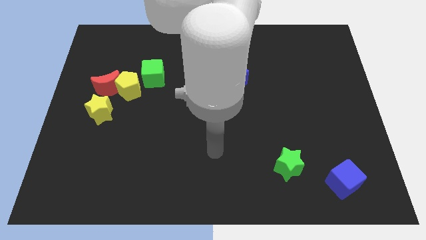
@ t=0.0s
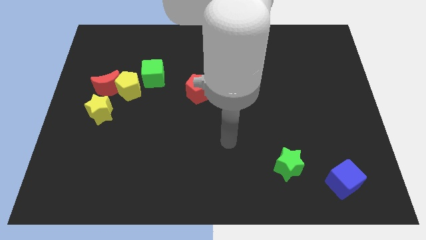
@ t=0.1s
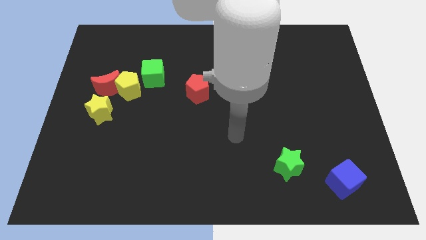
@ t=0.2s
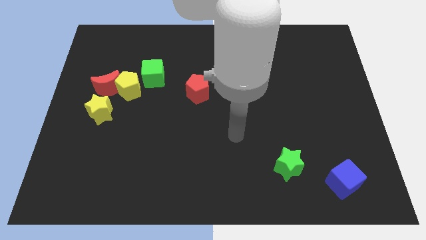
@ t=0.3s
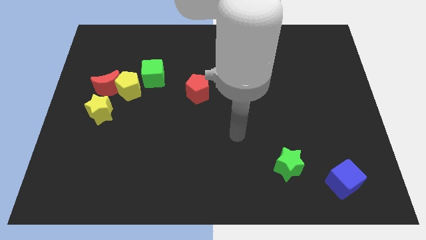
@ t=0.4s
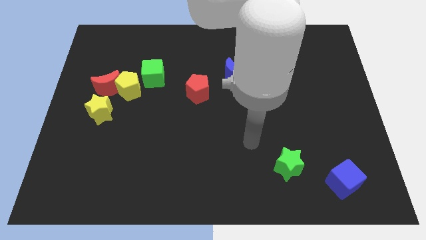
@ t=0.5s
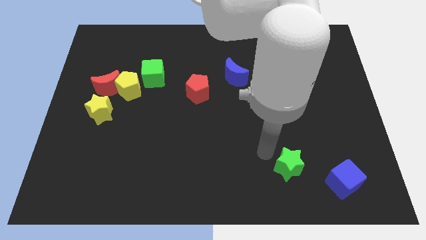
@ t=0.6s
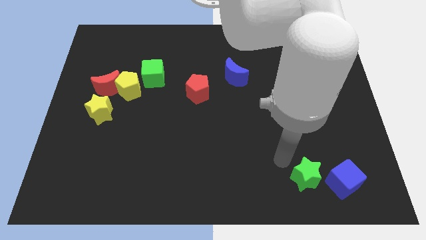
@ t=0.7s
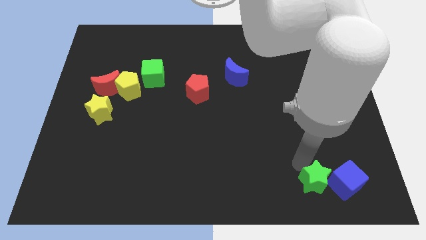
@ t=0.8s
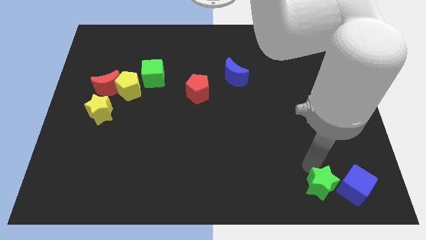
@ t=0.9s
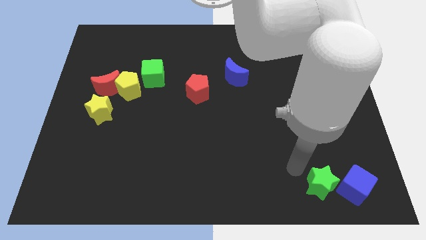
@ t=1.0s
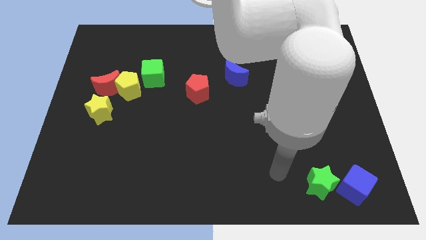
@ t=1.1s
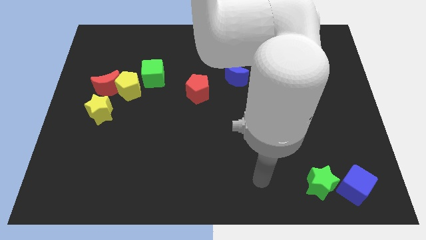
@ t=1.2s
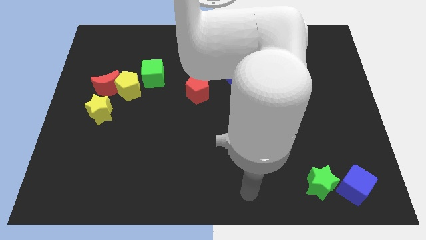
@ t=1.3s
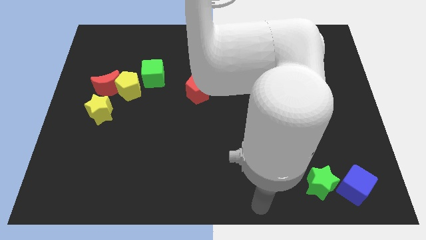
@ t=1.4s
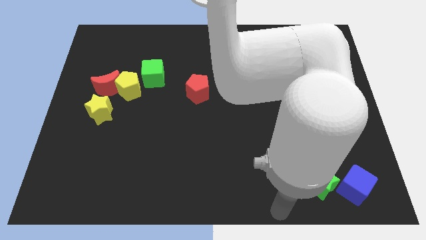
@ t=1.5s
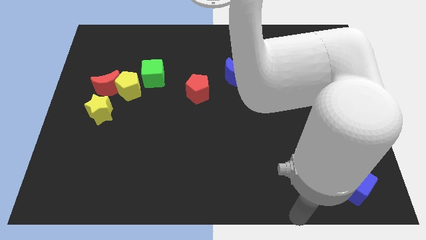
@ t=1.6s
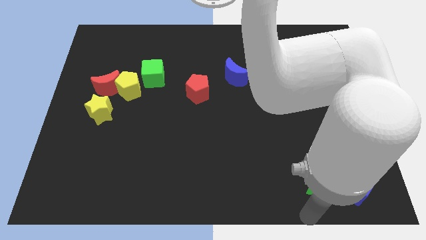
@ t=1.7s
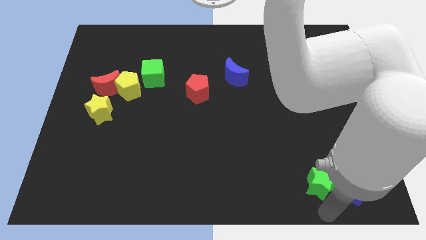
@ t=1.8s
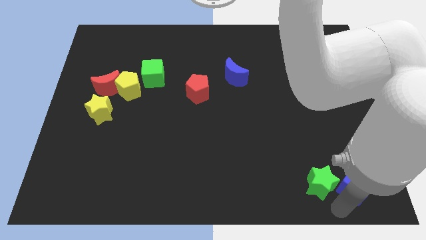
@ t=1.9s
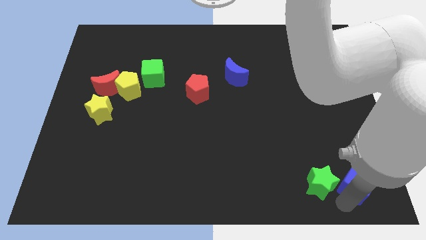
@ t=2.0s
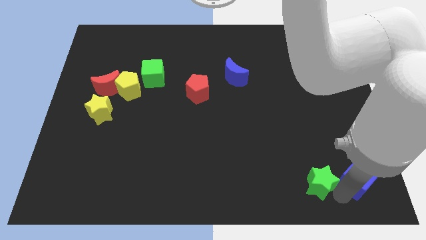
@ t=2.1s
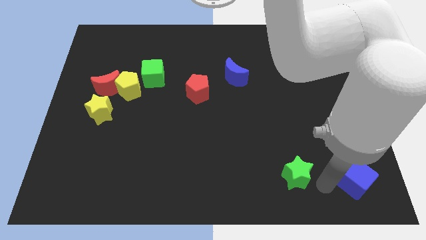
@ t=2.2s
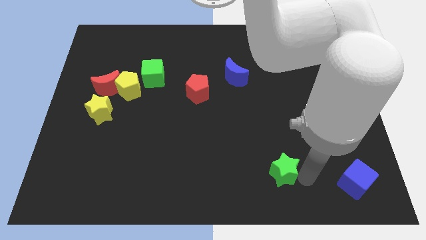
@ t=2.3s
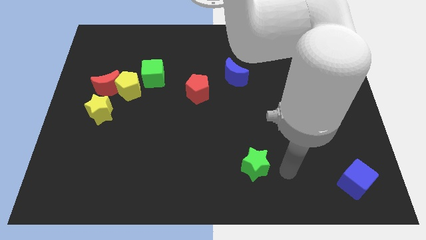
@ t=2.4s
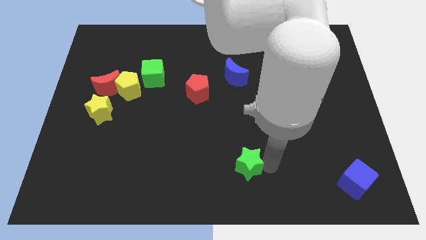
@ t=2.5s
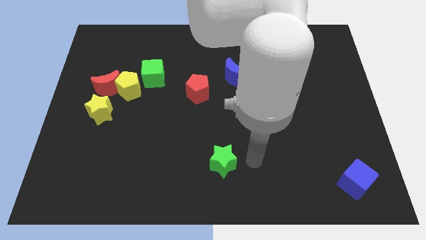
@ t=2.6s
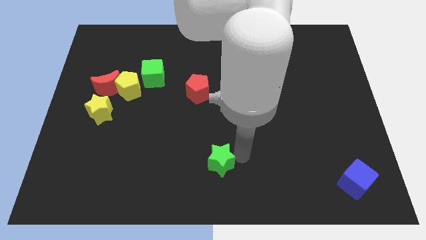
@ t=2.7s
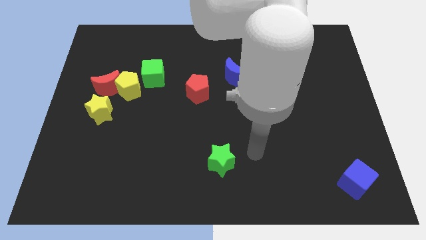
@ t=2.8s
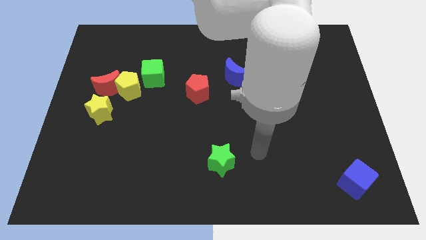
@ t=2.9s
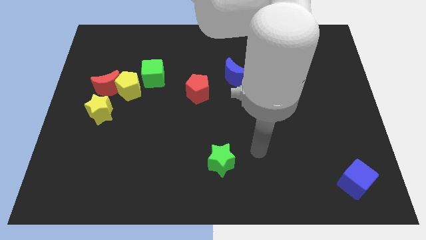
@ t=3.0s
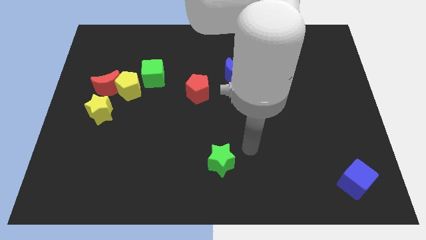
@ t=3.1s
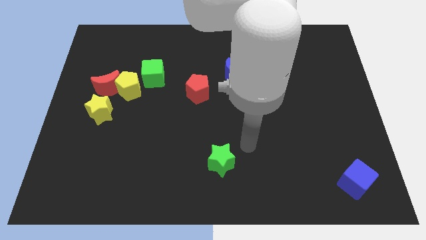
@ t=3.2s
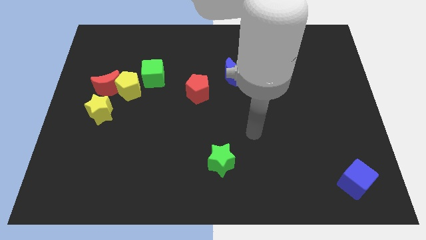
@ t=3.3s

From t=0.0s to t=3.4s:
move green star to the left of the board

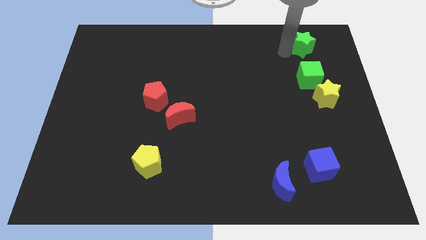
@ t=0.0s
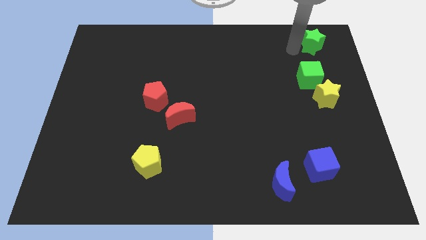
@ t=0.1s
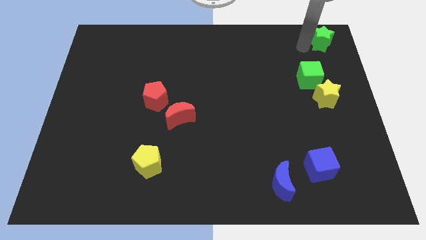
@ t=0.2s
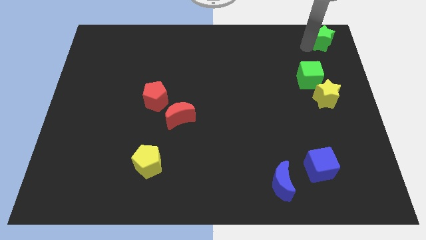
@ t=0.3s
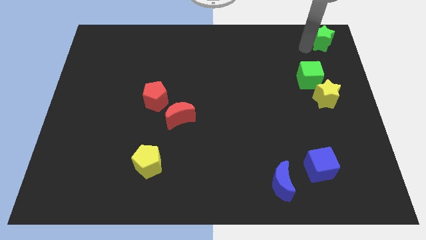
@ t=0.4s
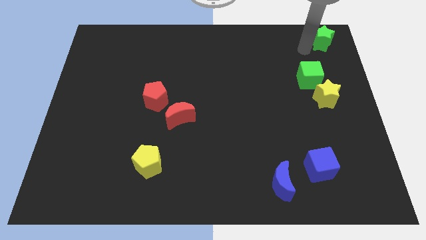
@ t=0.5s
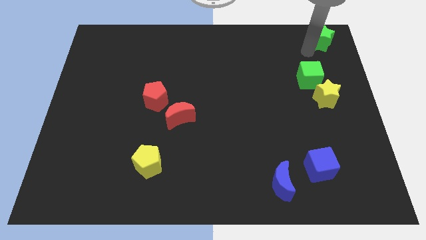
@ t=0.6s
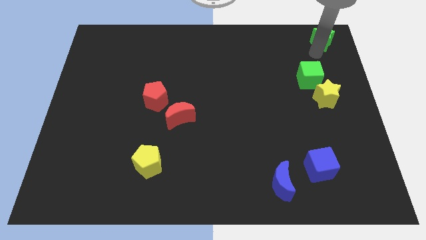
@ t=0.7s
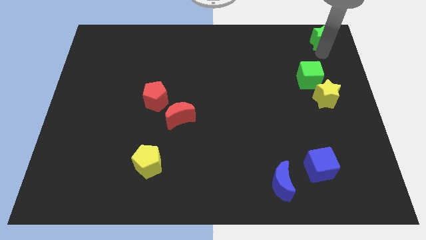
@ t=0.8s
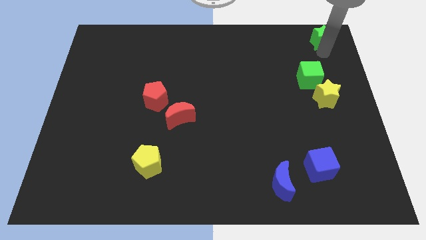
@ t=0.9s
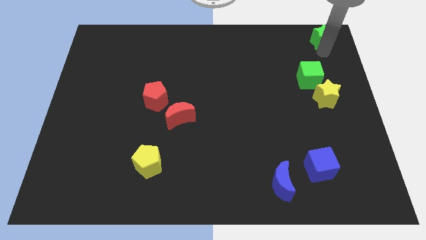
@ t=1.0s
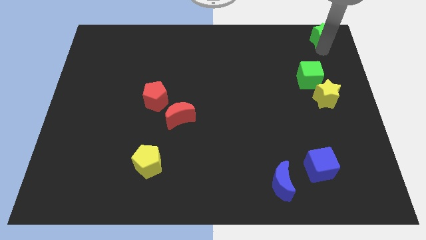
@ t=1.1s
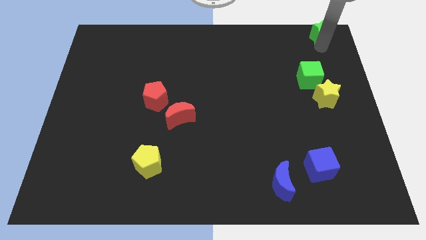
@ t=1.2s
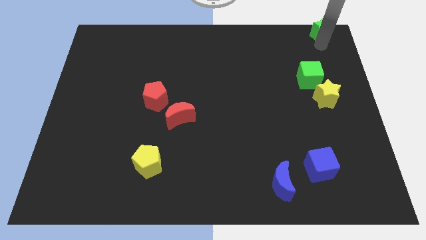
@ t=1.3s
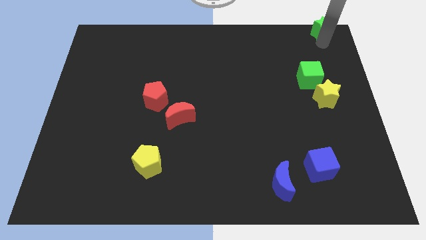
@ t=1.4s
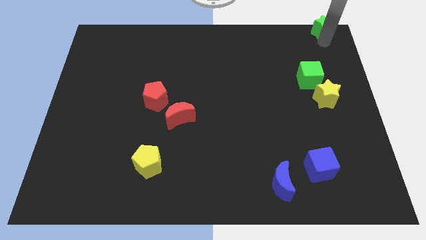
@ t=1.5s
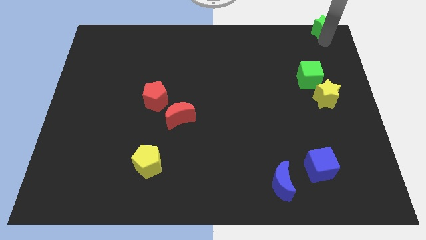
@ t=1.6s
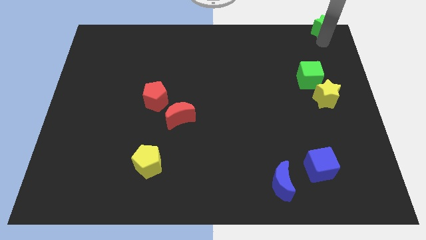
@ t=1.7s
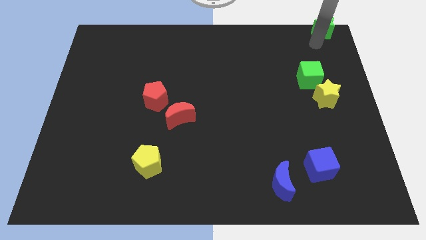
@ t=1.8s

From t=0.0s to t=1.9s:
push the green star to the top right of the board

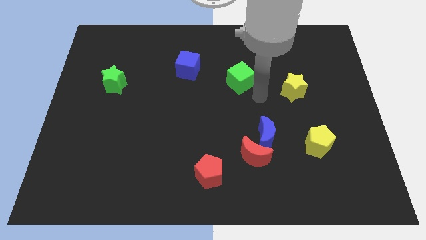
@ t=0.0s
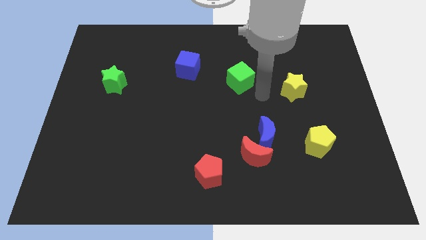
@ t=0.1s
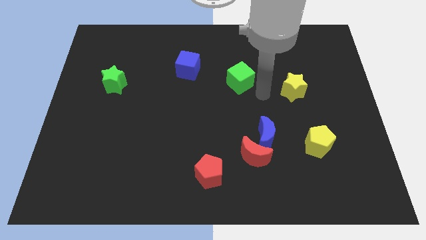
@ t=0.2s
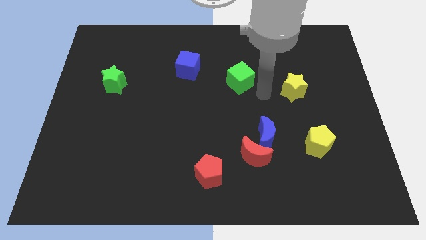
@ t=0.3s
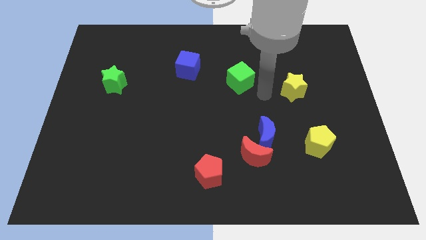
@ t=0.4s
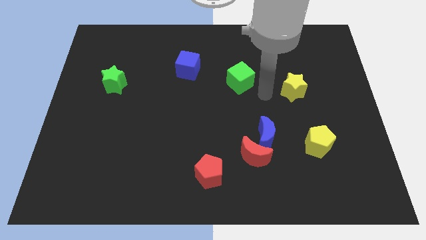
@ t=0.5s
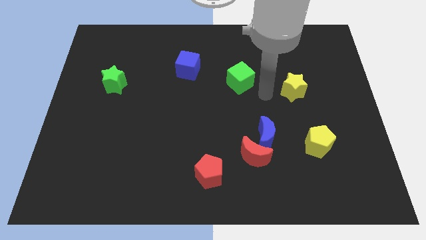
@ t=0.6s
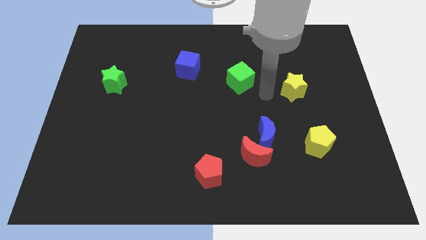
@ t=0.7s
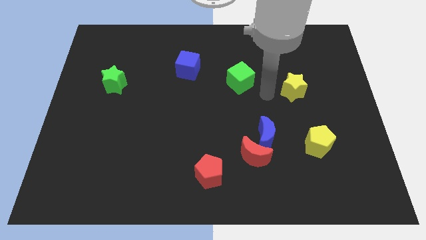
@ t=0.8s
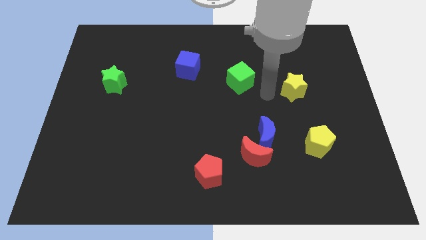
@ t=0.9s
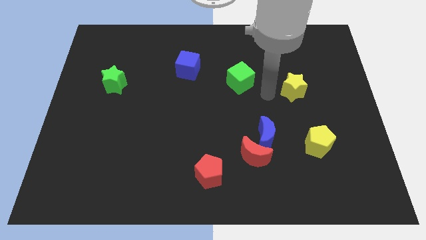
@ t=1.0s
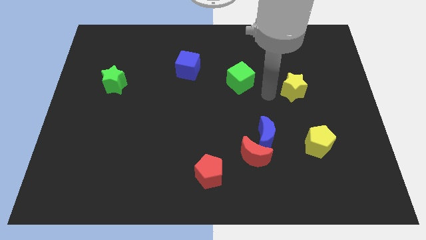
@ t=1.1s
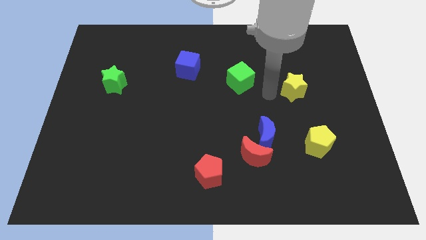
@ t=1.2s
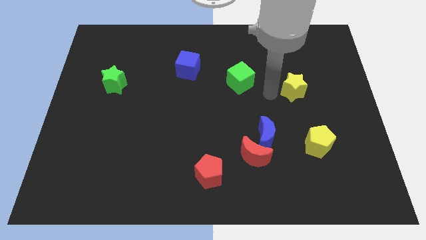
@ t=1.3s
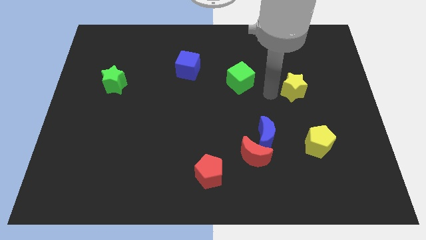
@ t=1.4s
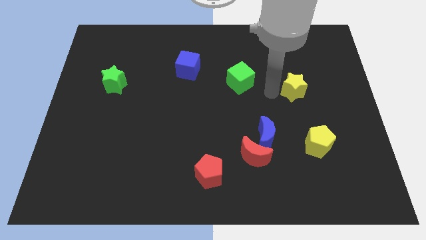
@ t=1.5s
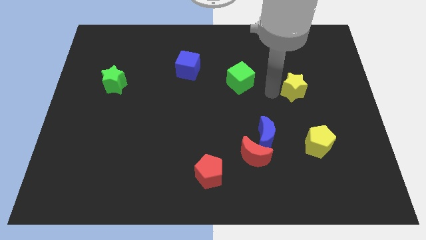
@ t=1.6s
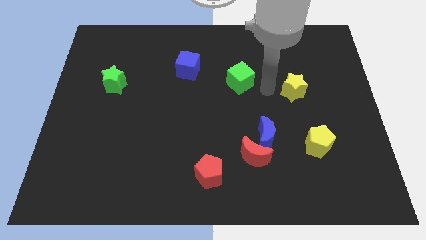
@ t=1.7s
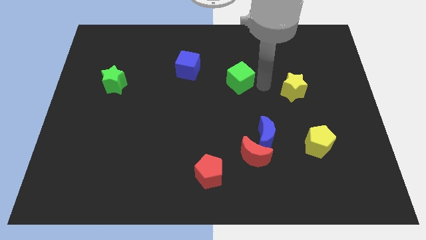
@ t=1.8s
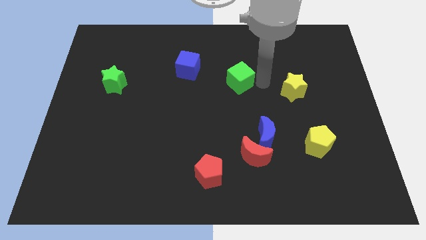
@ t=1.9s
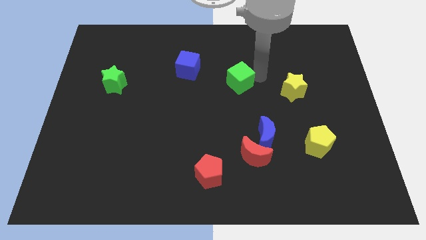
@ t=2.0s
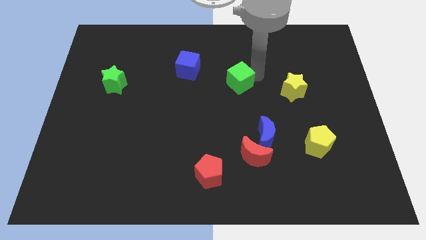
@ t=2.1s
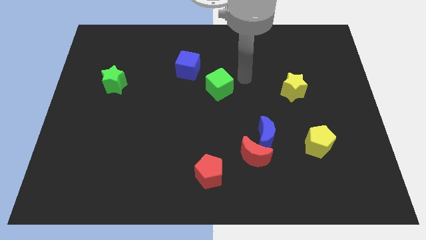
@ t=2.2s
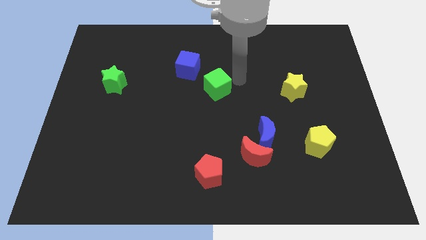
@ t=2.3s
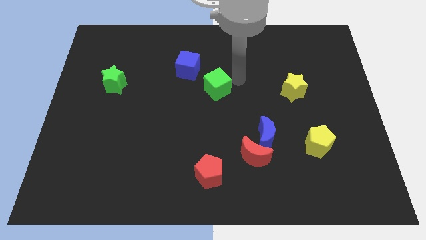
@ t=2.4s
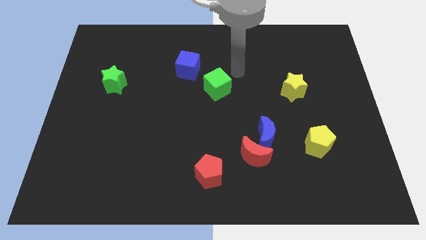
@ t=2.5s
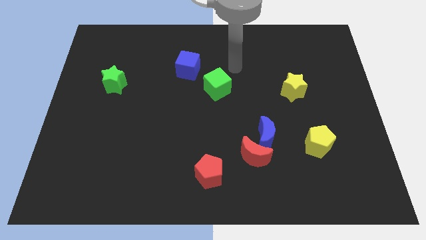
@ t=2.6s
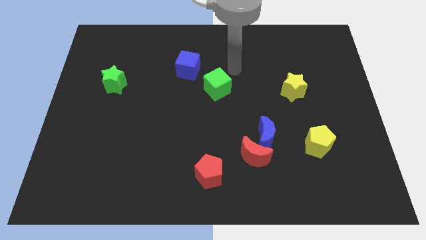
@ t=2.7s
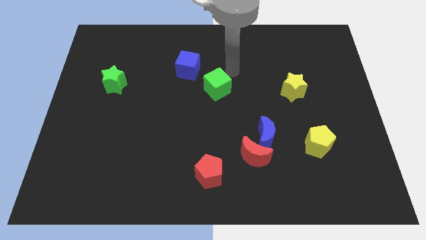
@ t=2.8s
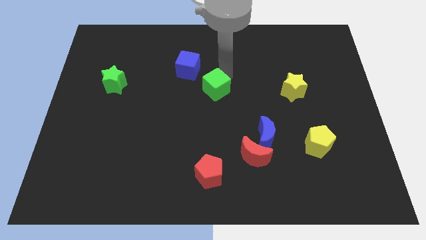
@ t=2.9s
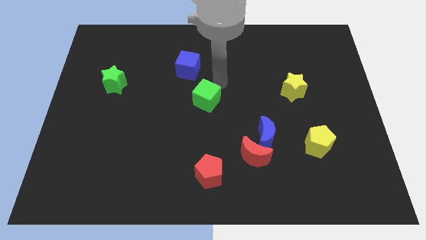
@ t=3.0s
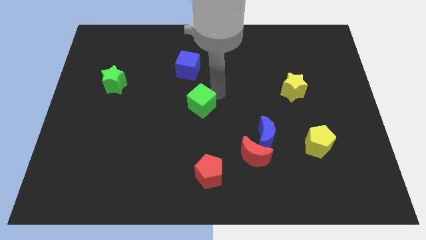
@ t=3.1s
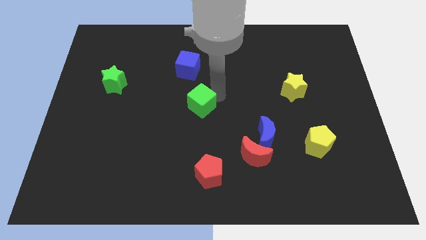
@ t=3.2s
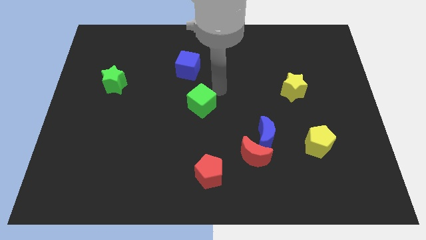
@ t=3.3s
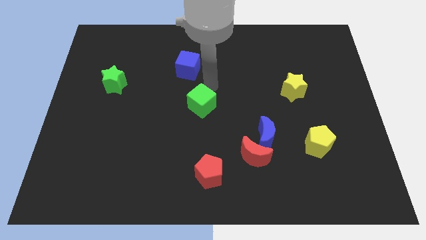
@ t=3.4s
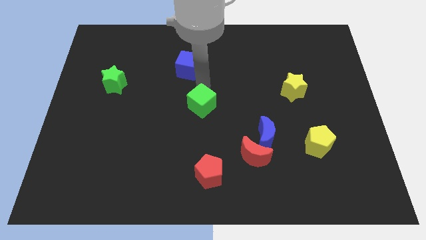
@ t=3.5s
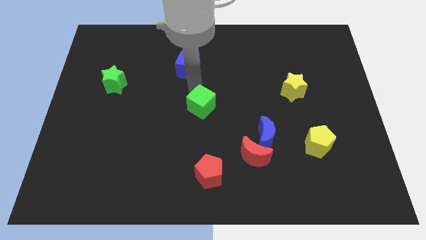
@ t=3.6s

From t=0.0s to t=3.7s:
place the green cube at the center of the board

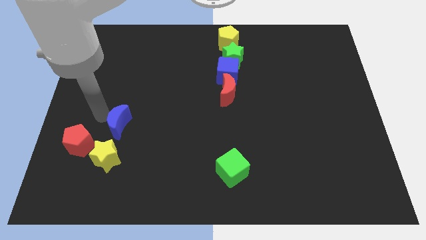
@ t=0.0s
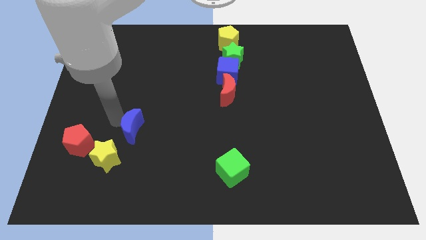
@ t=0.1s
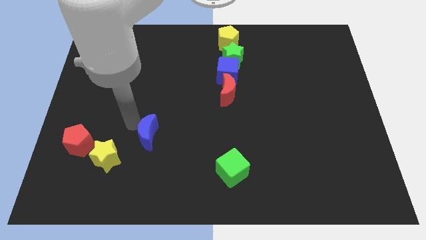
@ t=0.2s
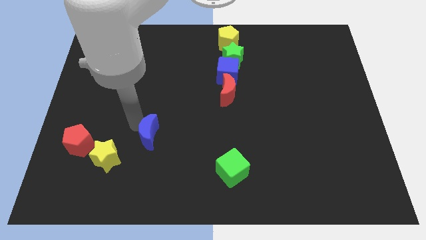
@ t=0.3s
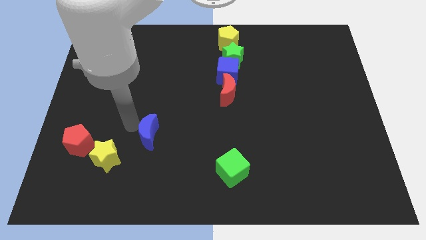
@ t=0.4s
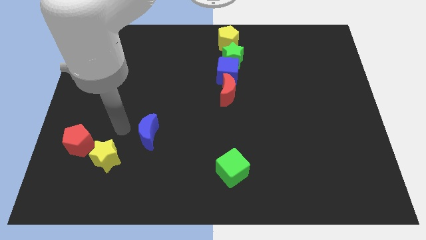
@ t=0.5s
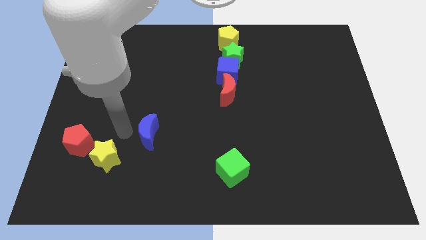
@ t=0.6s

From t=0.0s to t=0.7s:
push the blue crescent slightly to the right
